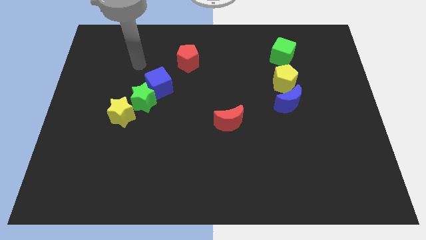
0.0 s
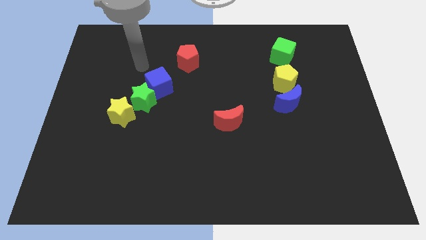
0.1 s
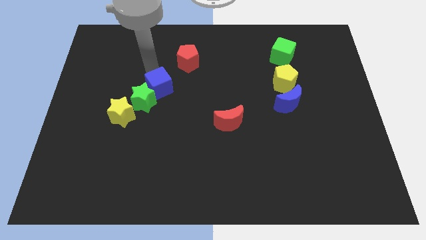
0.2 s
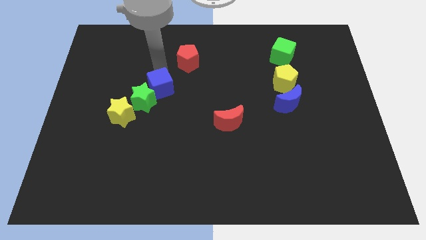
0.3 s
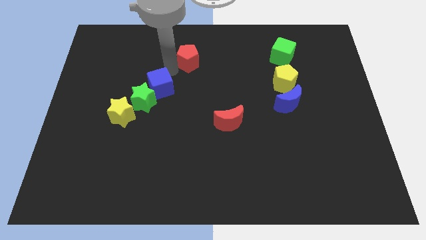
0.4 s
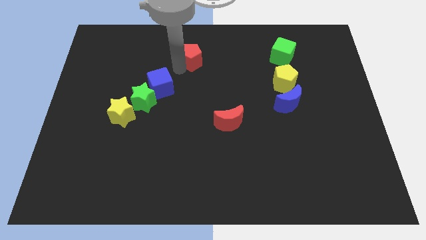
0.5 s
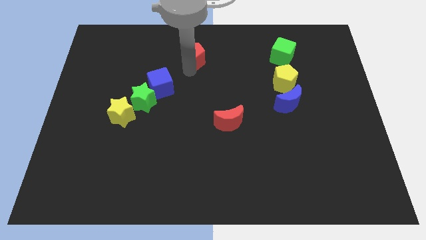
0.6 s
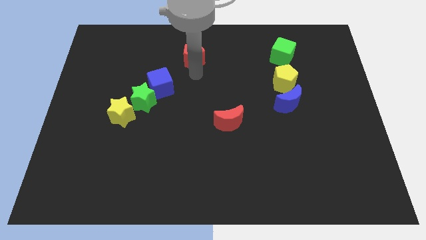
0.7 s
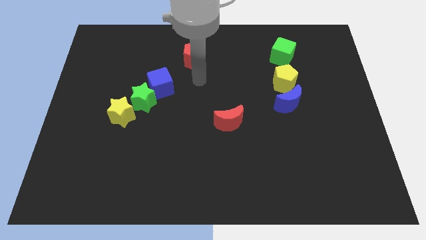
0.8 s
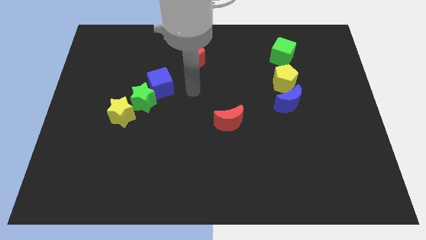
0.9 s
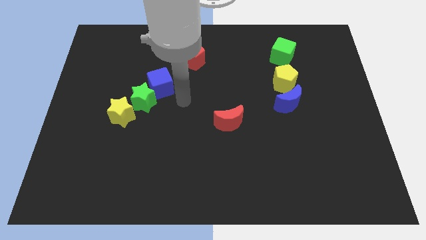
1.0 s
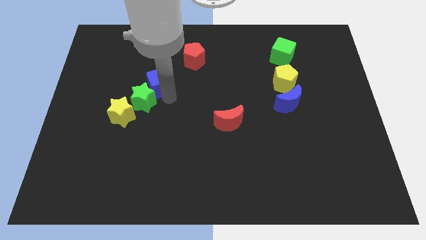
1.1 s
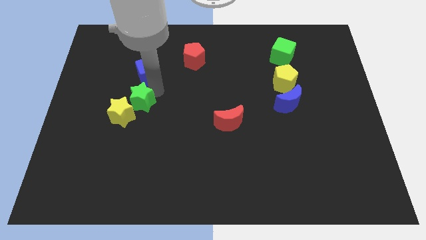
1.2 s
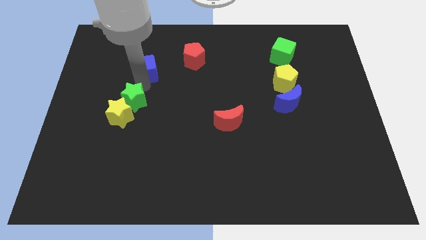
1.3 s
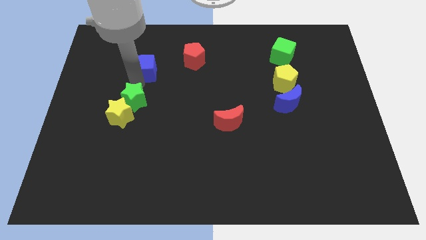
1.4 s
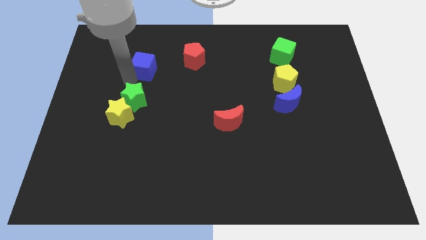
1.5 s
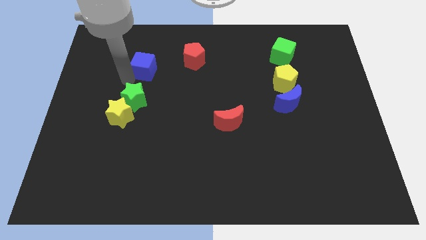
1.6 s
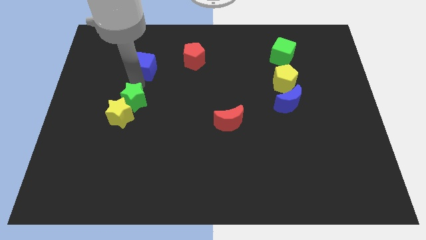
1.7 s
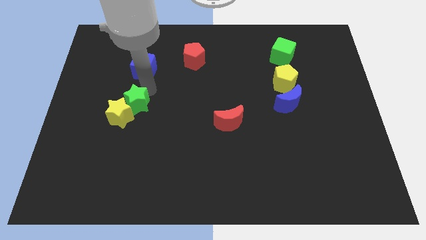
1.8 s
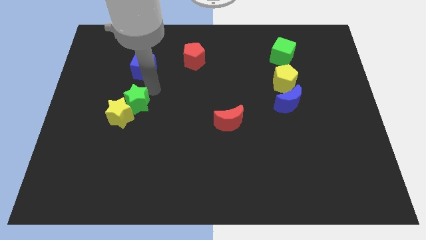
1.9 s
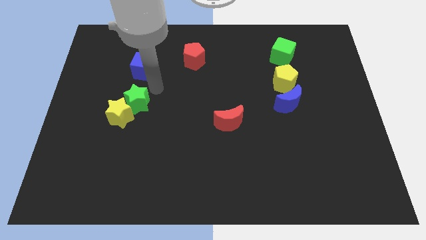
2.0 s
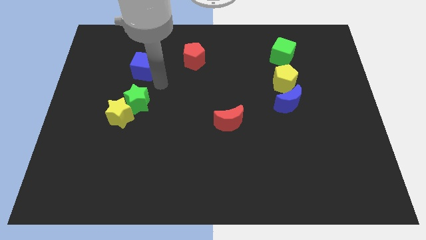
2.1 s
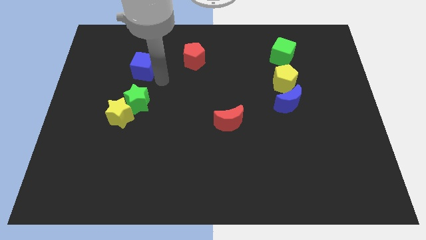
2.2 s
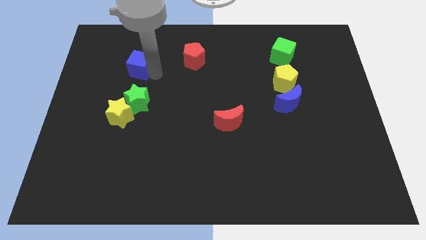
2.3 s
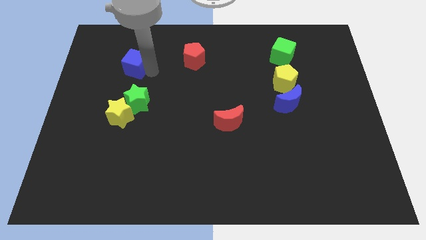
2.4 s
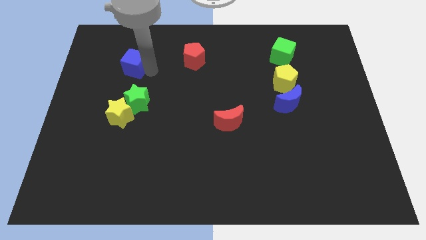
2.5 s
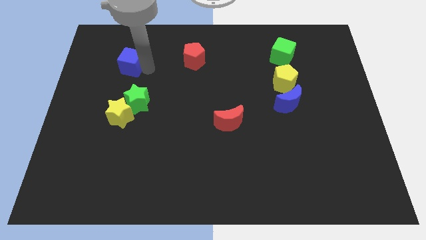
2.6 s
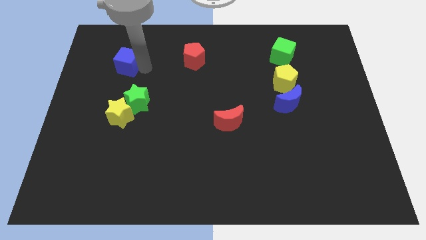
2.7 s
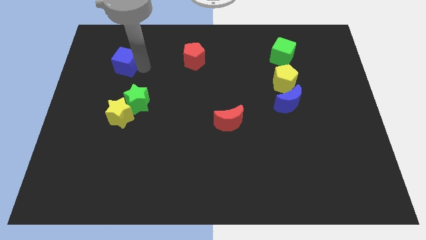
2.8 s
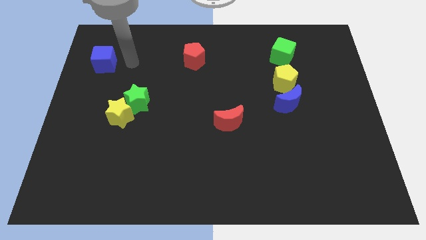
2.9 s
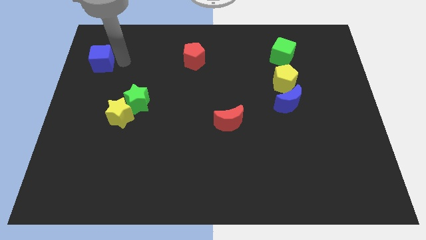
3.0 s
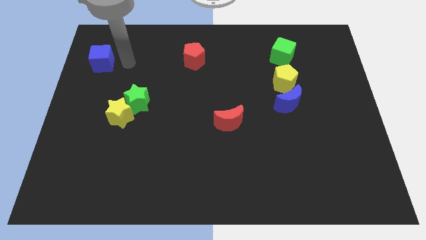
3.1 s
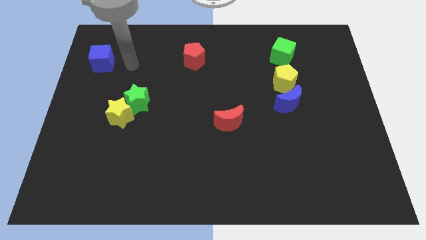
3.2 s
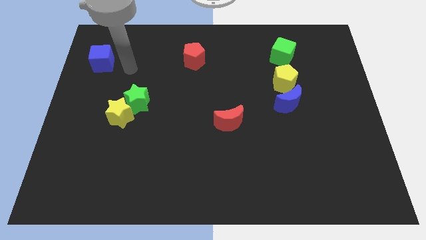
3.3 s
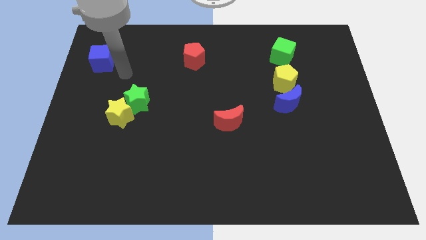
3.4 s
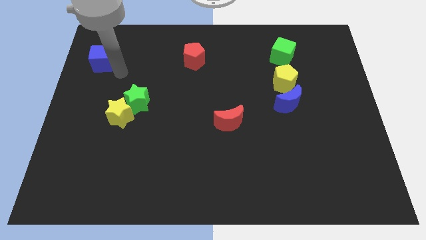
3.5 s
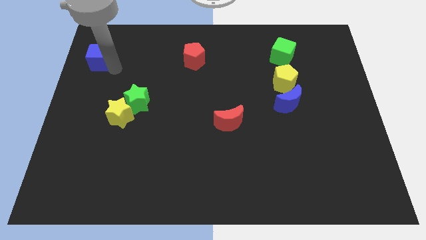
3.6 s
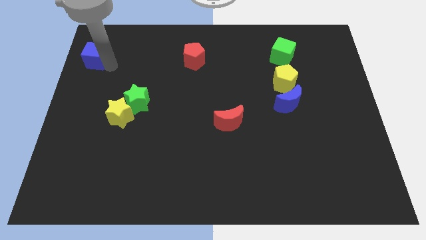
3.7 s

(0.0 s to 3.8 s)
separate the blue cube and green star

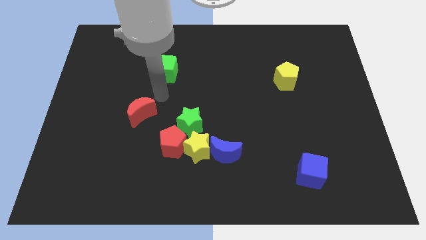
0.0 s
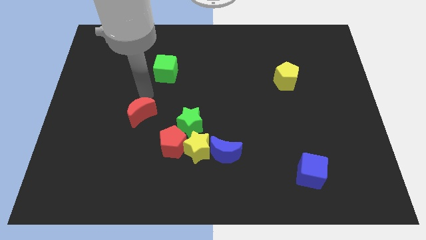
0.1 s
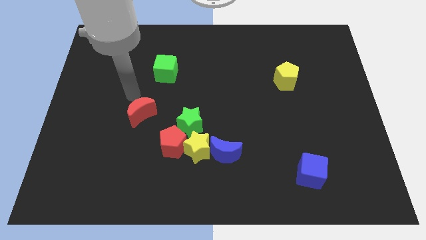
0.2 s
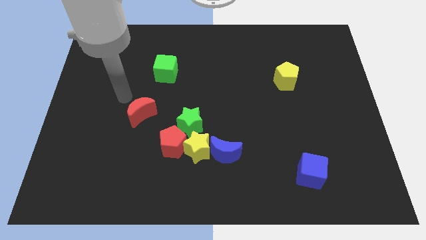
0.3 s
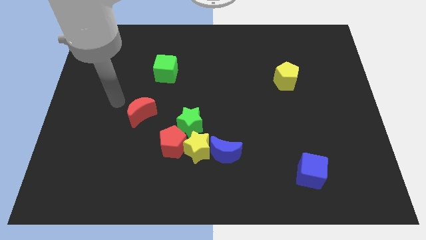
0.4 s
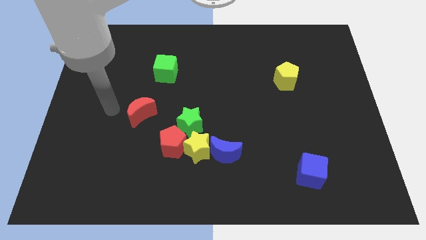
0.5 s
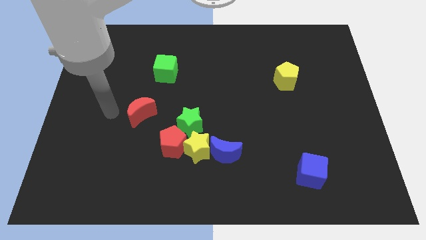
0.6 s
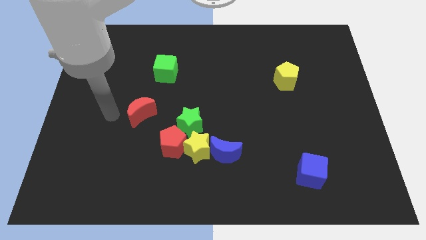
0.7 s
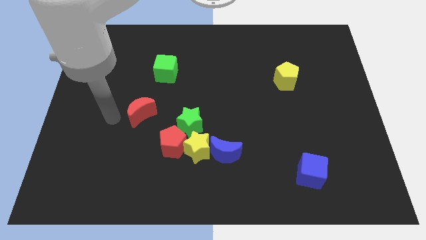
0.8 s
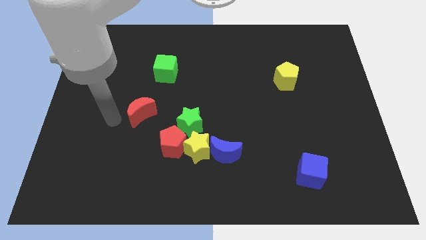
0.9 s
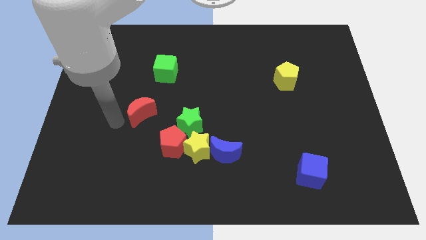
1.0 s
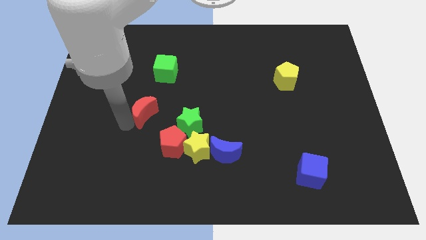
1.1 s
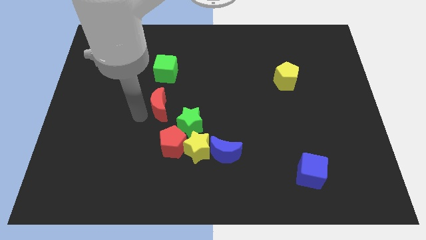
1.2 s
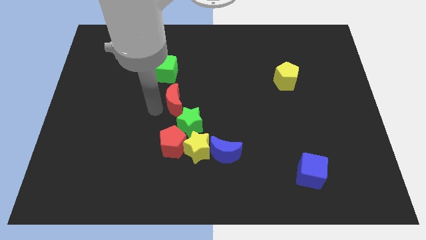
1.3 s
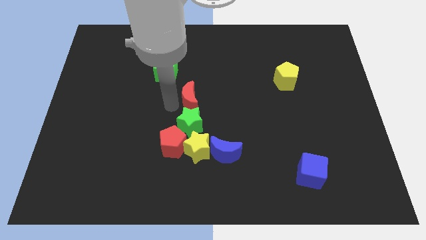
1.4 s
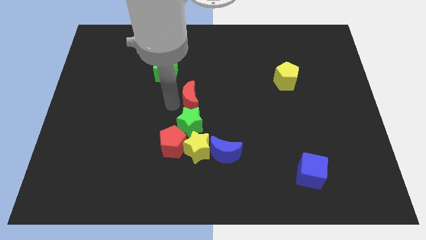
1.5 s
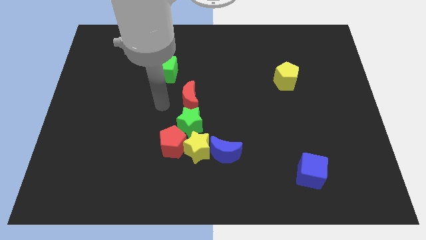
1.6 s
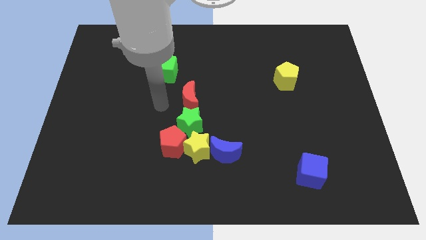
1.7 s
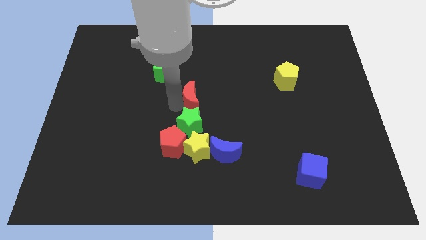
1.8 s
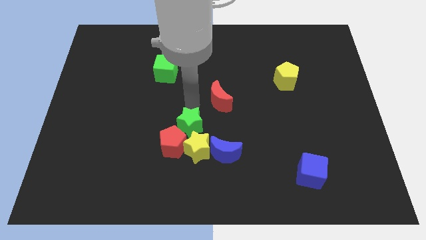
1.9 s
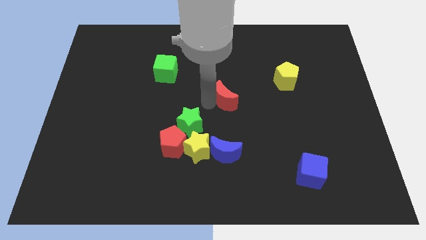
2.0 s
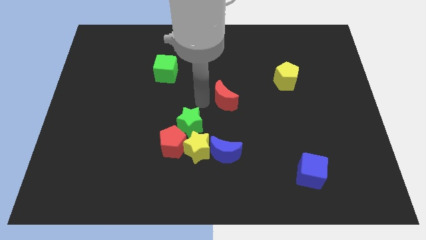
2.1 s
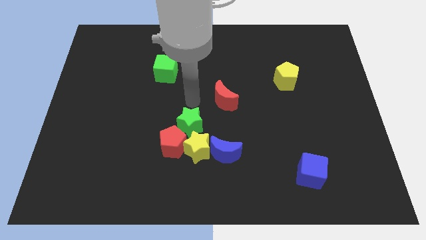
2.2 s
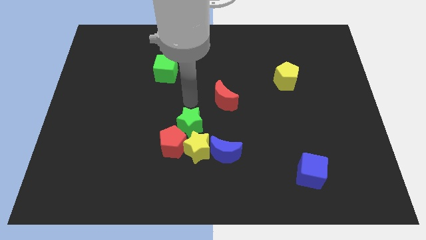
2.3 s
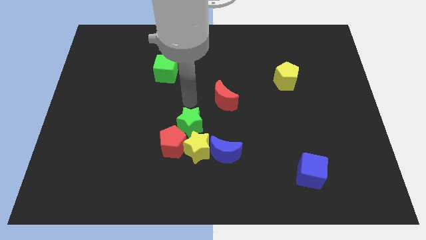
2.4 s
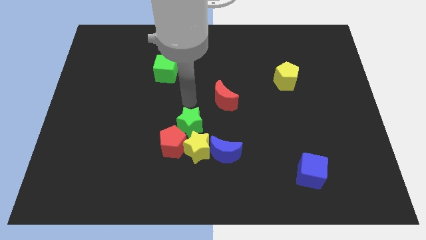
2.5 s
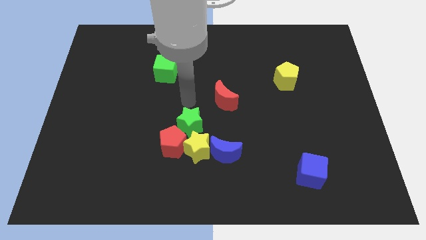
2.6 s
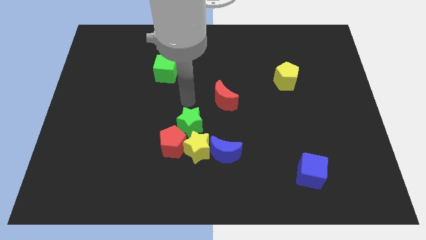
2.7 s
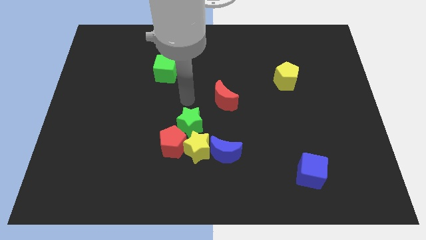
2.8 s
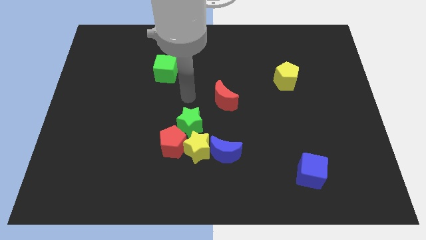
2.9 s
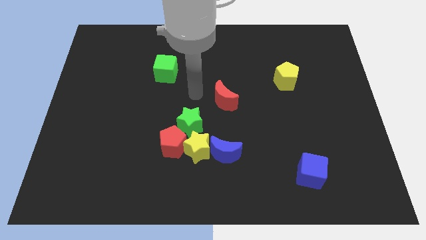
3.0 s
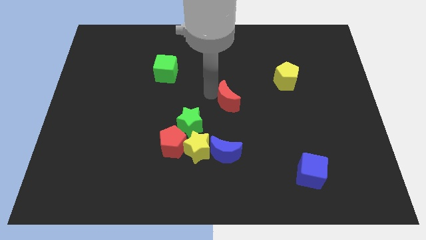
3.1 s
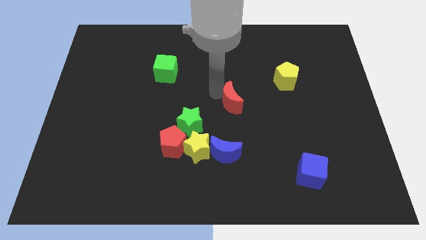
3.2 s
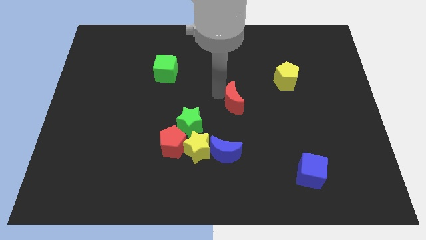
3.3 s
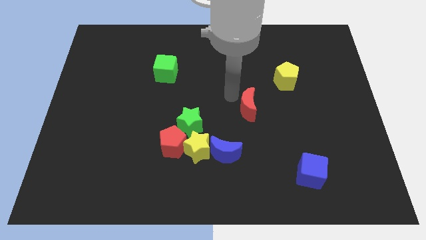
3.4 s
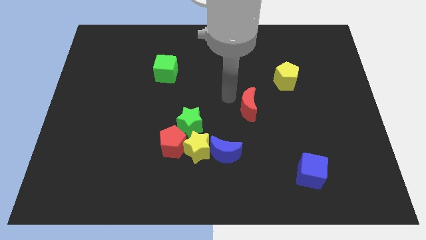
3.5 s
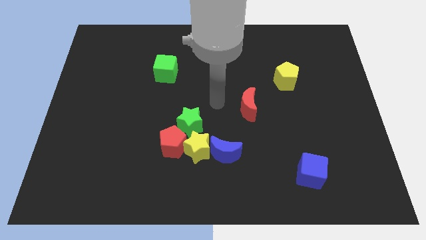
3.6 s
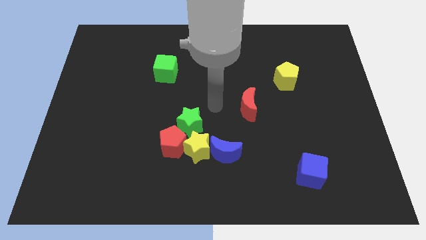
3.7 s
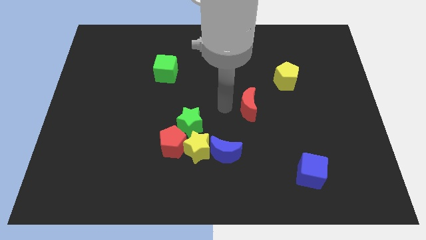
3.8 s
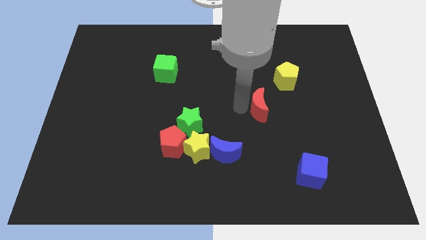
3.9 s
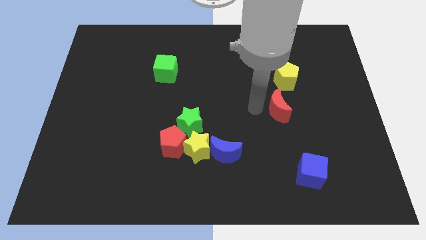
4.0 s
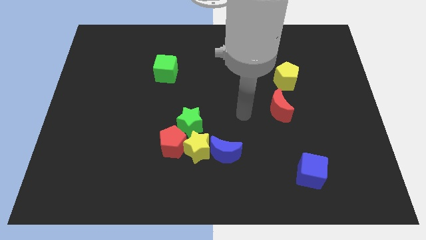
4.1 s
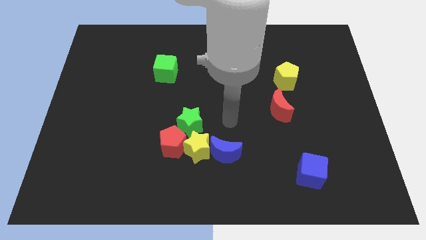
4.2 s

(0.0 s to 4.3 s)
place red crescent to the bottom of yellow pentagon

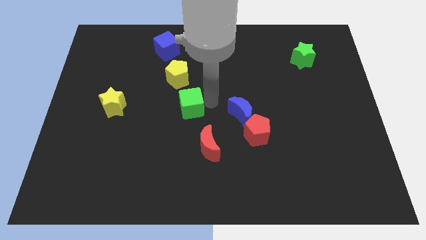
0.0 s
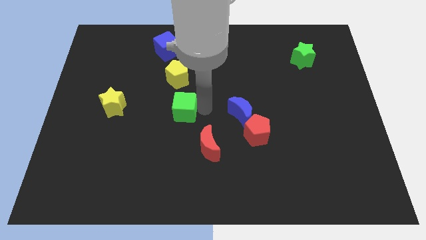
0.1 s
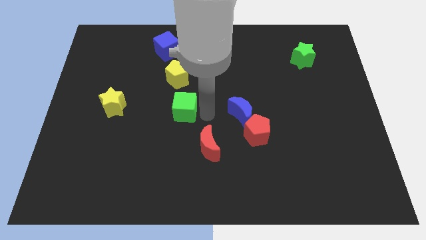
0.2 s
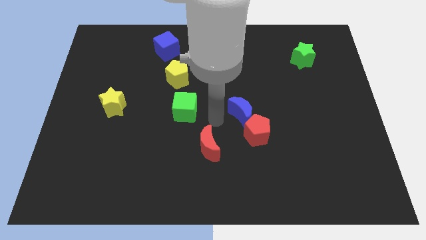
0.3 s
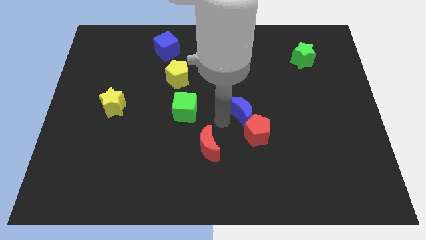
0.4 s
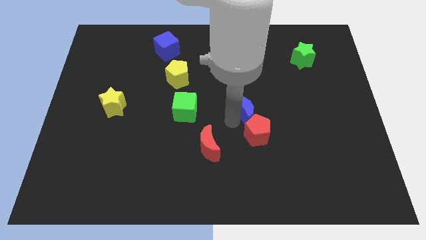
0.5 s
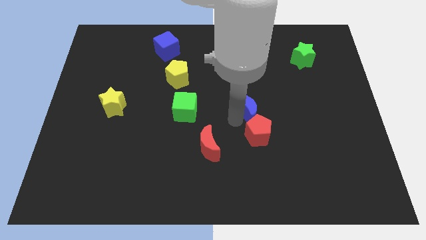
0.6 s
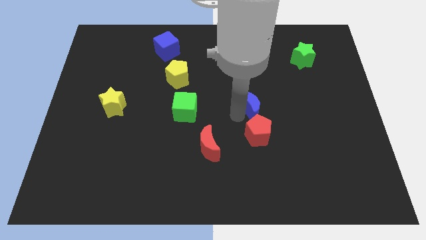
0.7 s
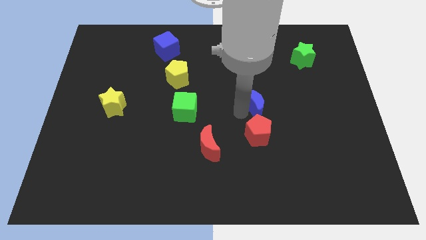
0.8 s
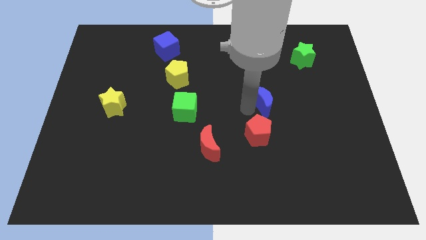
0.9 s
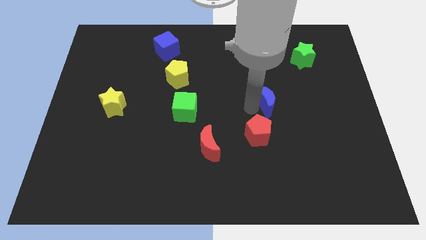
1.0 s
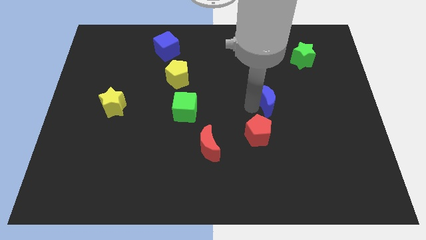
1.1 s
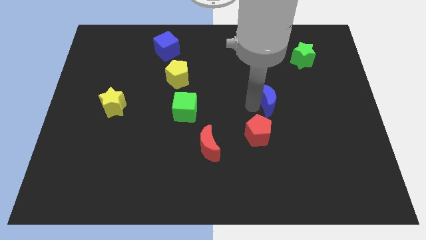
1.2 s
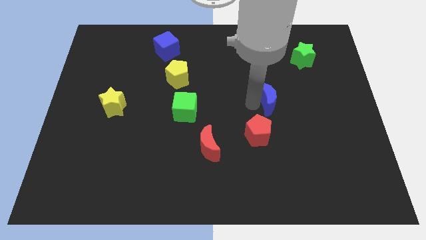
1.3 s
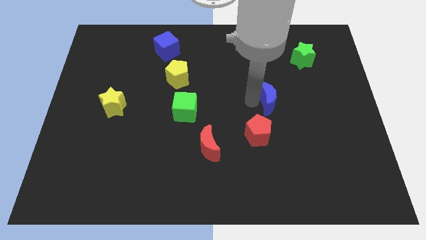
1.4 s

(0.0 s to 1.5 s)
move blue moon slightly apart from the red pentagon
